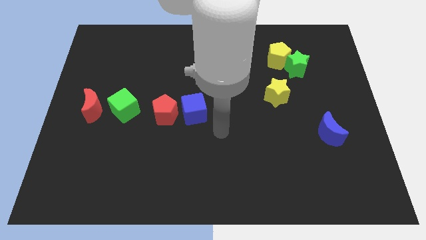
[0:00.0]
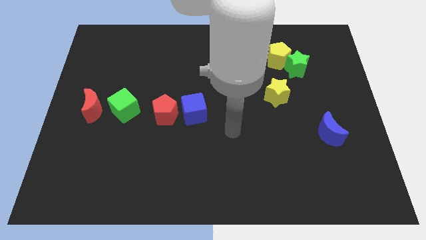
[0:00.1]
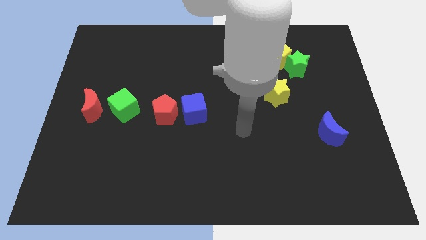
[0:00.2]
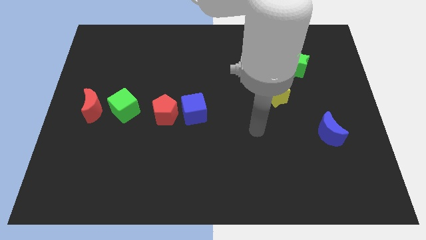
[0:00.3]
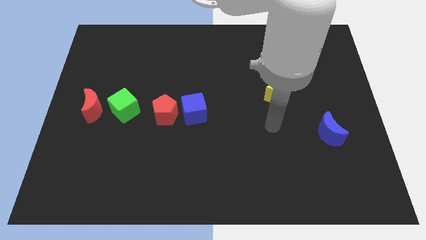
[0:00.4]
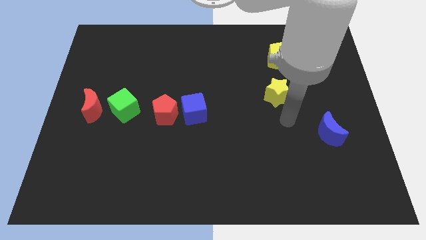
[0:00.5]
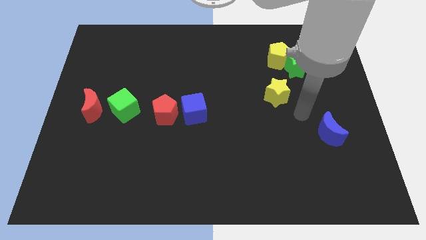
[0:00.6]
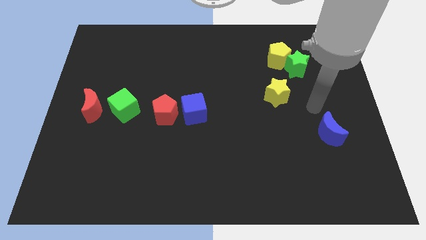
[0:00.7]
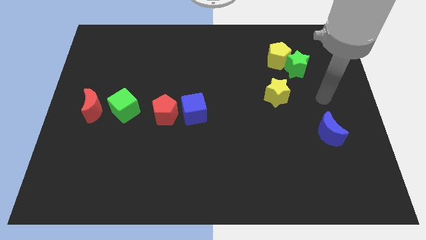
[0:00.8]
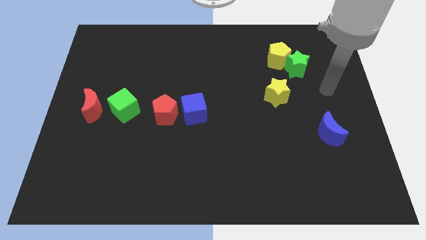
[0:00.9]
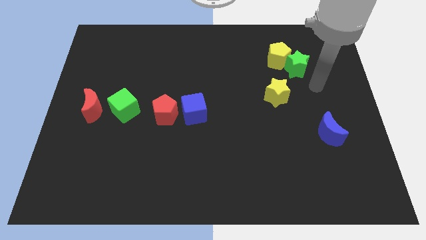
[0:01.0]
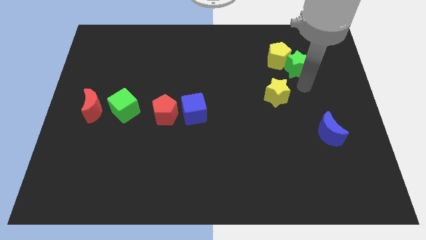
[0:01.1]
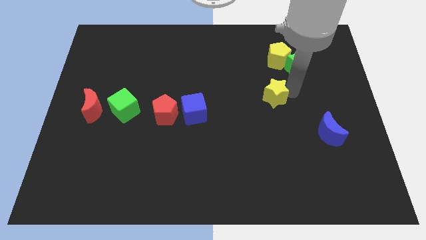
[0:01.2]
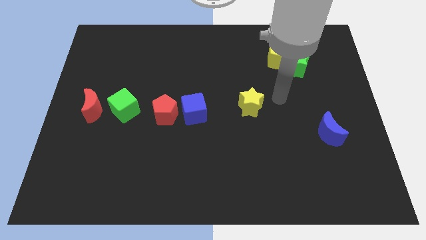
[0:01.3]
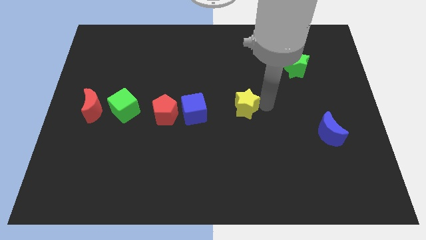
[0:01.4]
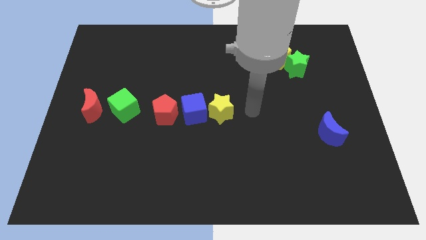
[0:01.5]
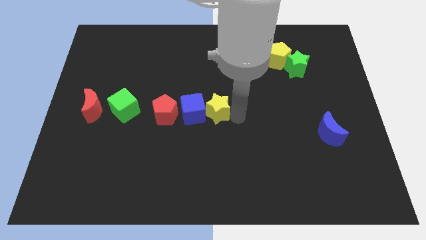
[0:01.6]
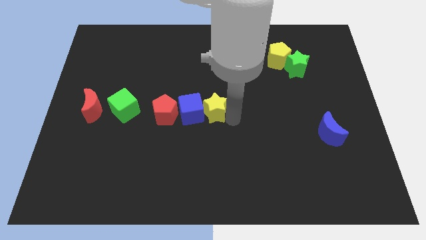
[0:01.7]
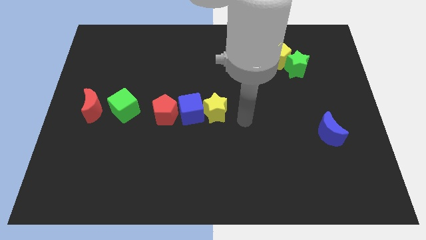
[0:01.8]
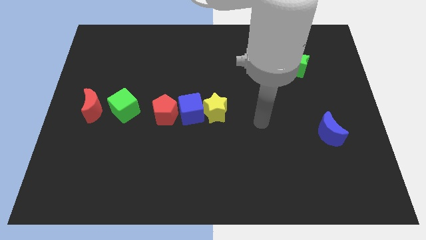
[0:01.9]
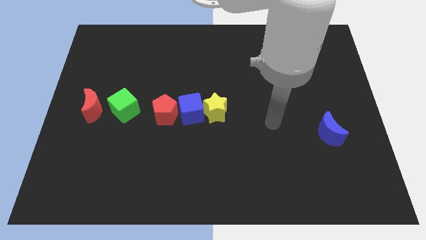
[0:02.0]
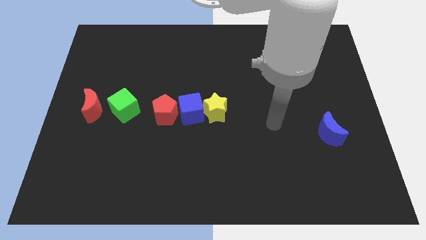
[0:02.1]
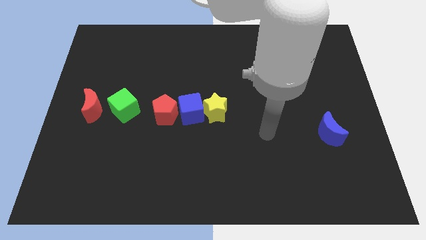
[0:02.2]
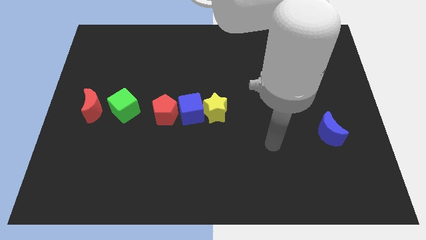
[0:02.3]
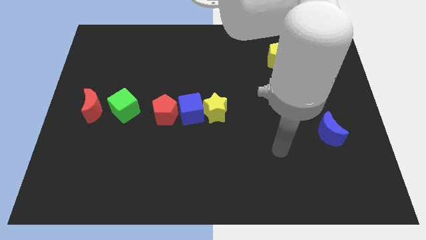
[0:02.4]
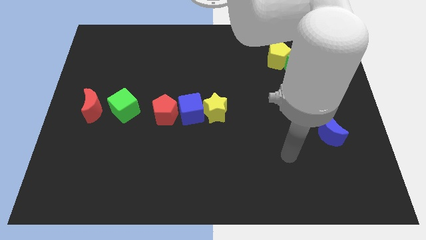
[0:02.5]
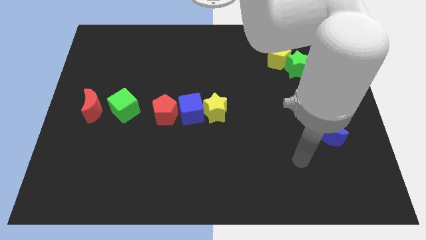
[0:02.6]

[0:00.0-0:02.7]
place the yellow star to the right of the blue cube

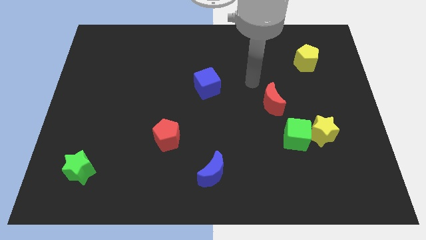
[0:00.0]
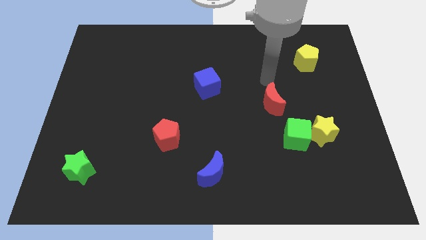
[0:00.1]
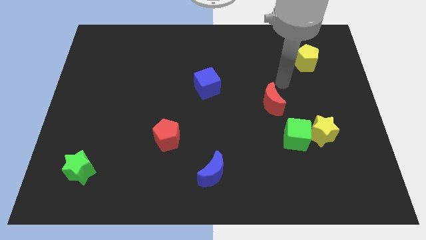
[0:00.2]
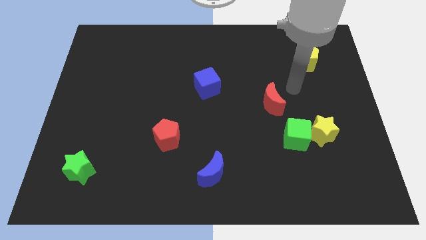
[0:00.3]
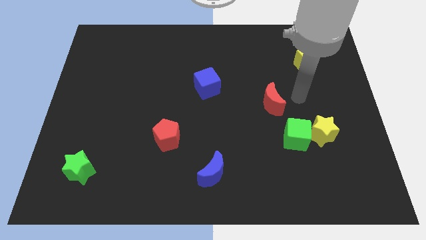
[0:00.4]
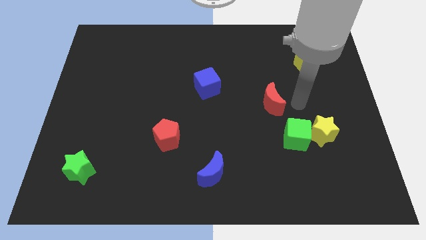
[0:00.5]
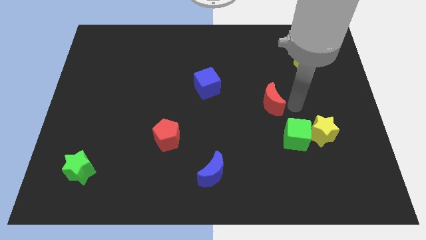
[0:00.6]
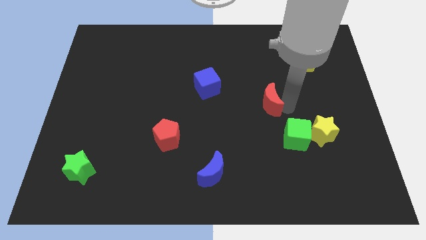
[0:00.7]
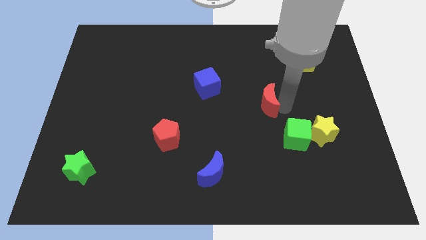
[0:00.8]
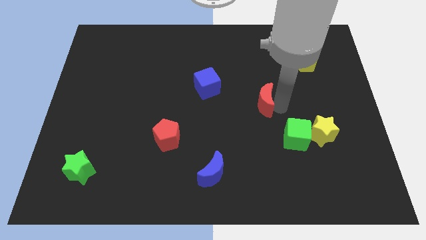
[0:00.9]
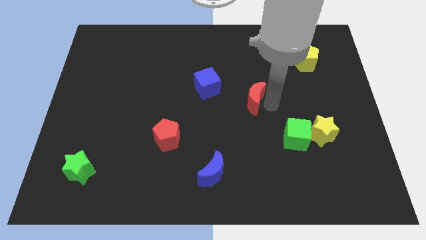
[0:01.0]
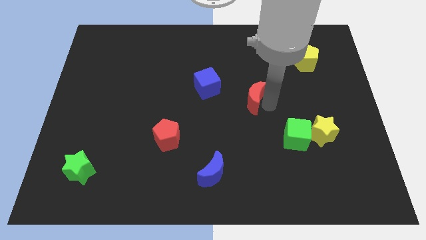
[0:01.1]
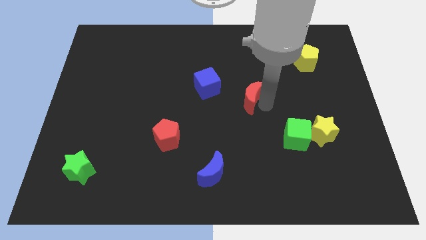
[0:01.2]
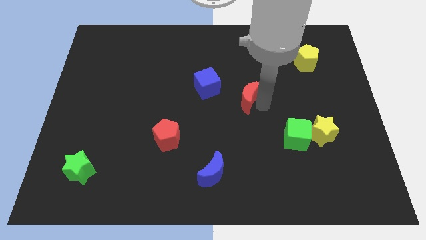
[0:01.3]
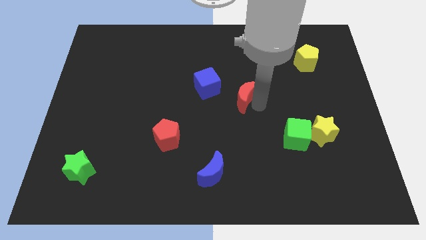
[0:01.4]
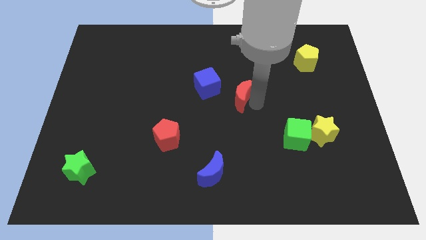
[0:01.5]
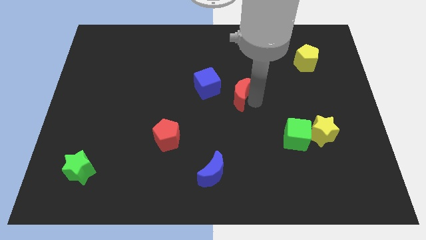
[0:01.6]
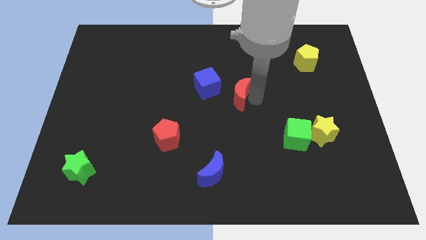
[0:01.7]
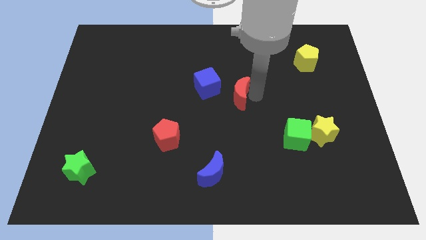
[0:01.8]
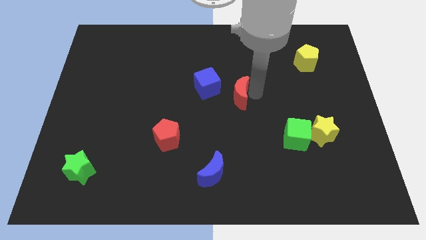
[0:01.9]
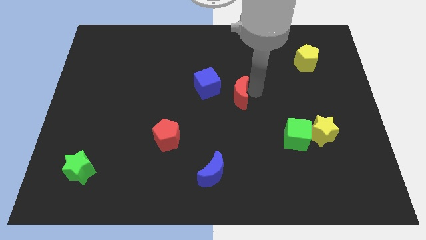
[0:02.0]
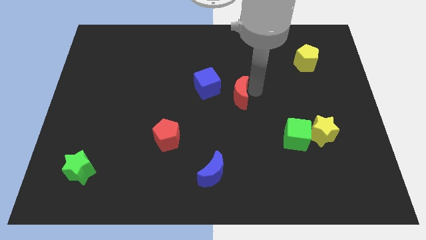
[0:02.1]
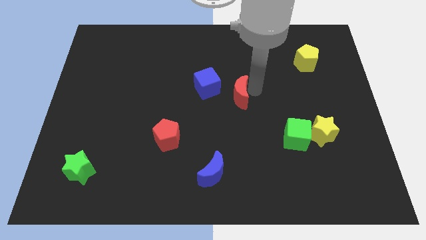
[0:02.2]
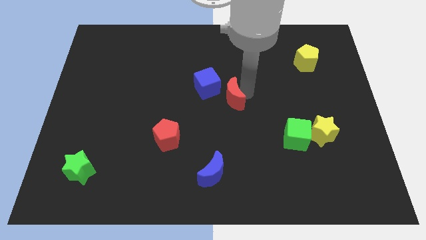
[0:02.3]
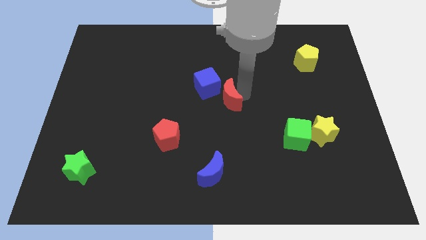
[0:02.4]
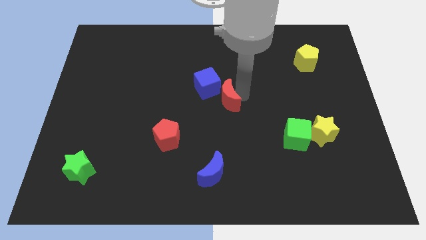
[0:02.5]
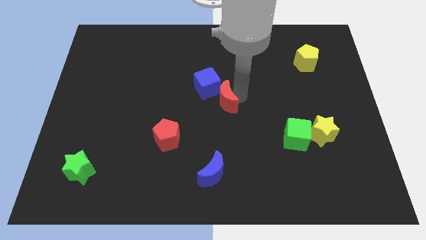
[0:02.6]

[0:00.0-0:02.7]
push the red moon to the bottom right of blue cube

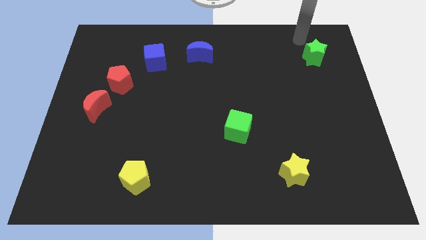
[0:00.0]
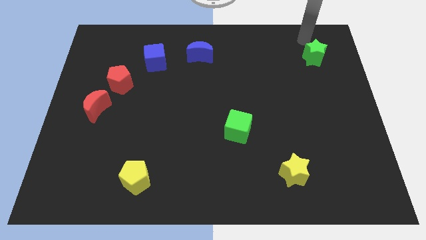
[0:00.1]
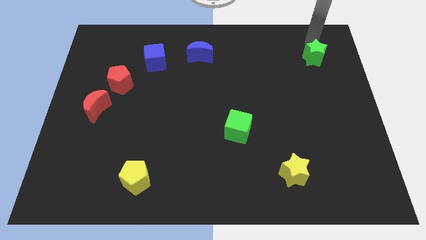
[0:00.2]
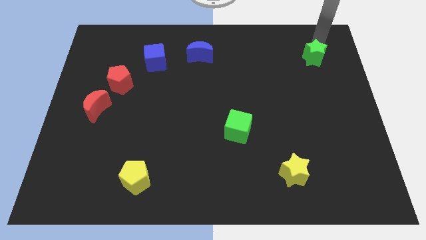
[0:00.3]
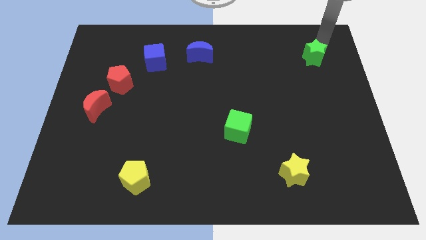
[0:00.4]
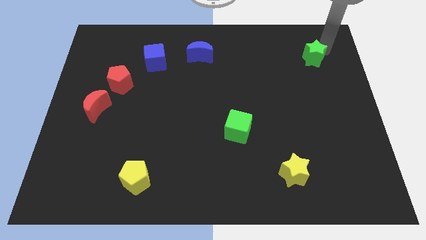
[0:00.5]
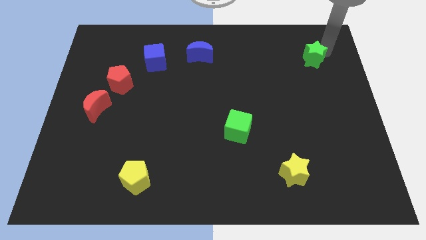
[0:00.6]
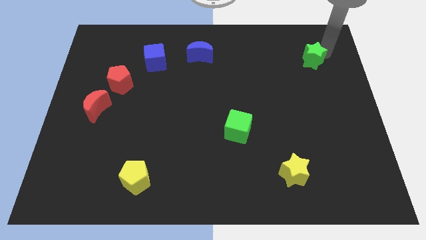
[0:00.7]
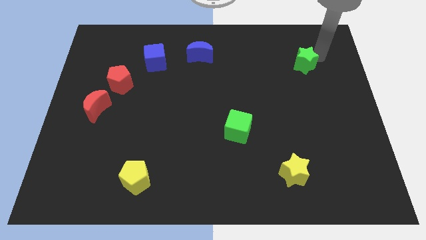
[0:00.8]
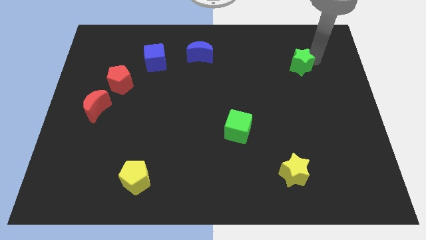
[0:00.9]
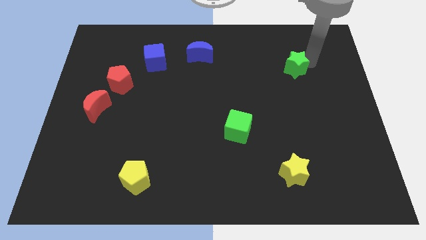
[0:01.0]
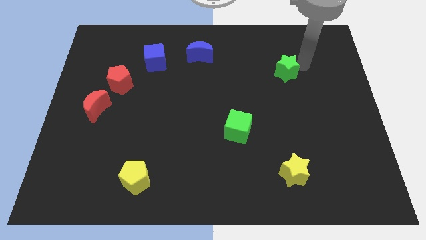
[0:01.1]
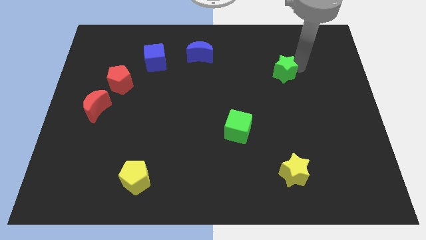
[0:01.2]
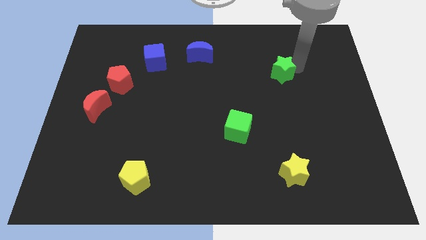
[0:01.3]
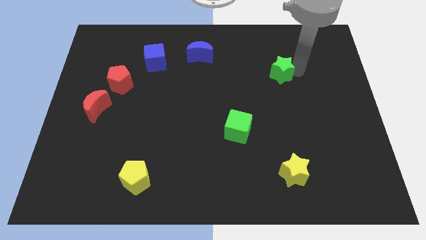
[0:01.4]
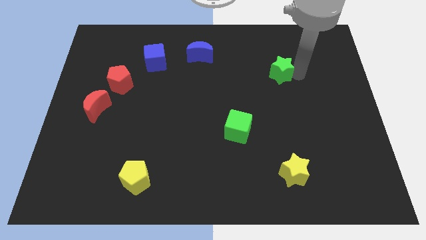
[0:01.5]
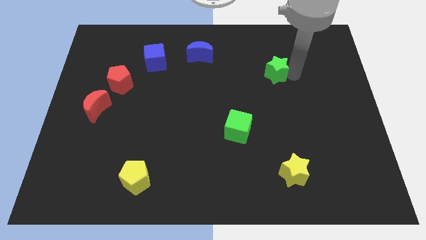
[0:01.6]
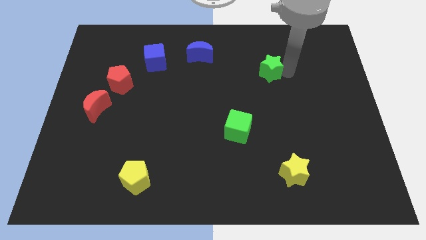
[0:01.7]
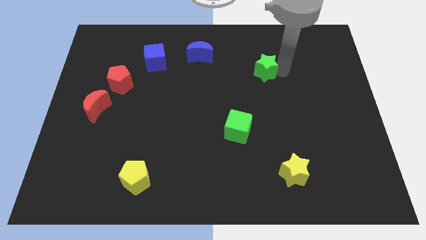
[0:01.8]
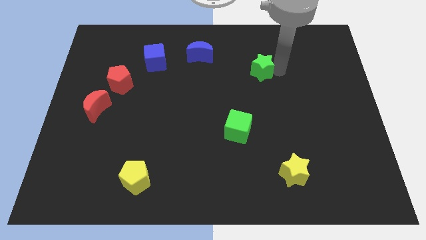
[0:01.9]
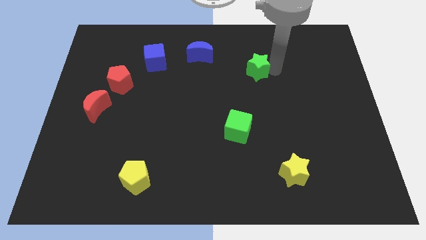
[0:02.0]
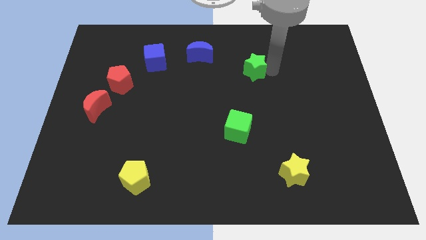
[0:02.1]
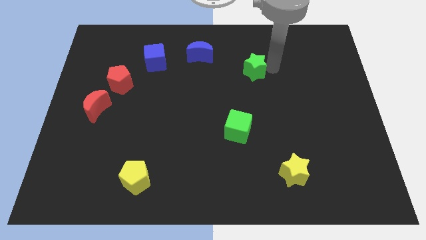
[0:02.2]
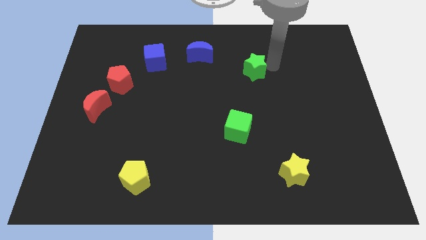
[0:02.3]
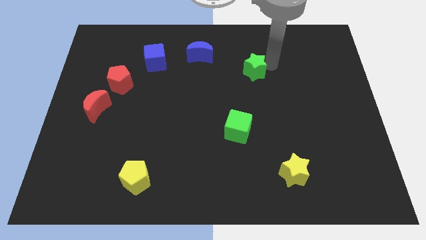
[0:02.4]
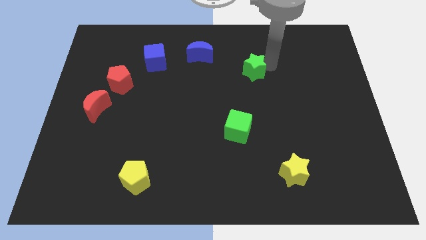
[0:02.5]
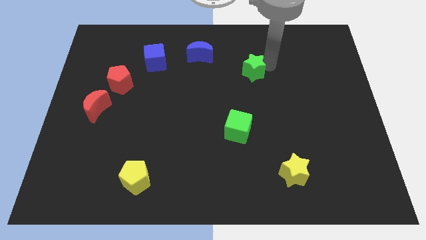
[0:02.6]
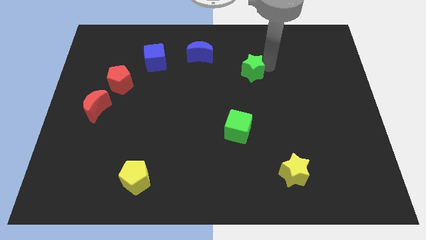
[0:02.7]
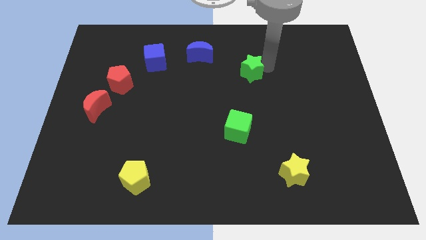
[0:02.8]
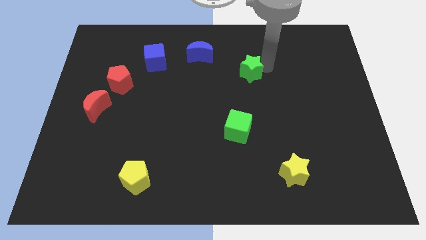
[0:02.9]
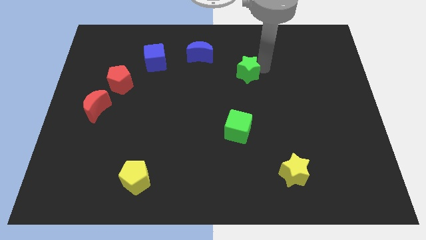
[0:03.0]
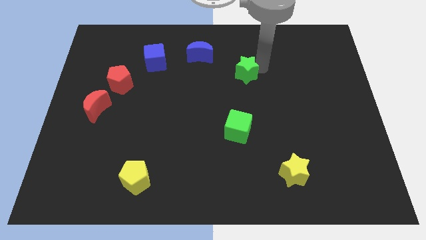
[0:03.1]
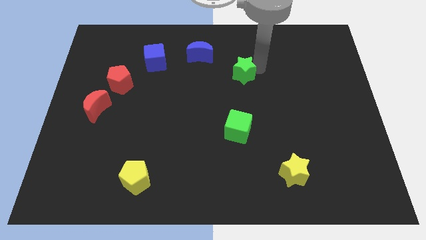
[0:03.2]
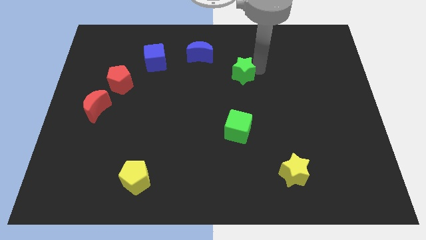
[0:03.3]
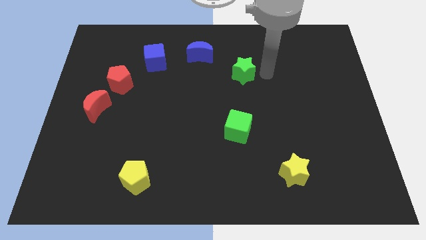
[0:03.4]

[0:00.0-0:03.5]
place green star to the right of blue crescent in the form of arc
